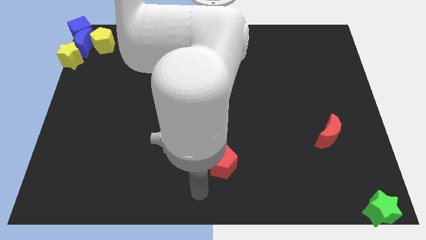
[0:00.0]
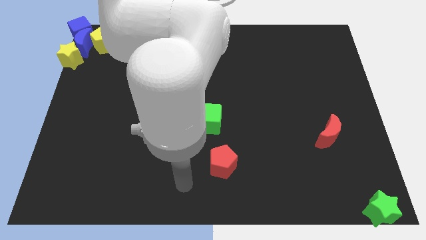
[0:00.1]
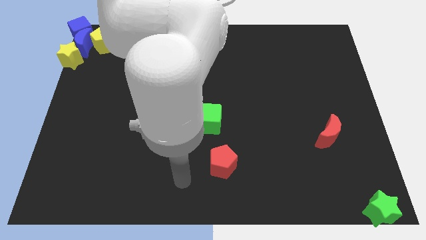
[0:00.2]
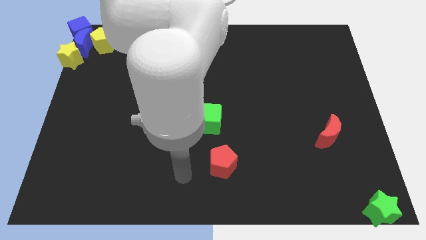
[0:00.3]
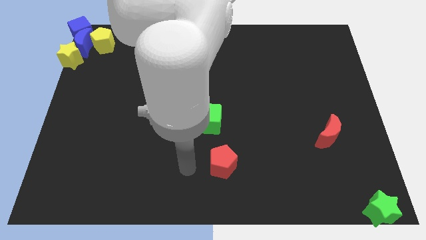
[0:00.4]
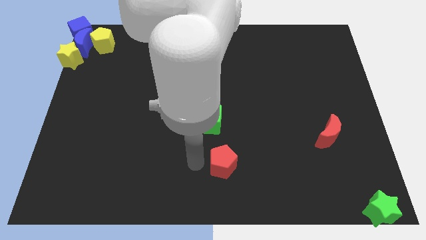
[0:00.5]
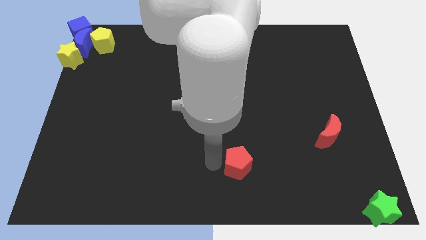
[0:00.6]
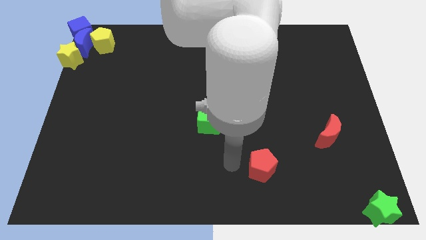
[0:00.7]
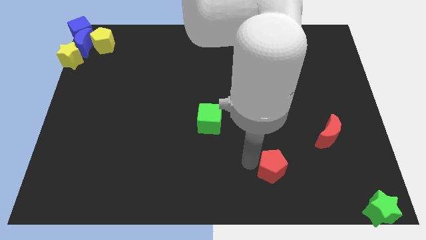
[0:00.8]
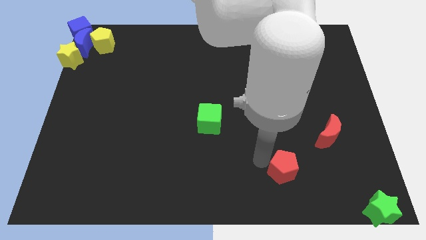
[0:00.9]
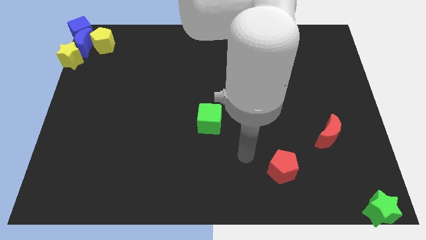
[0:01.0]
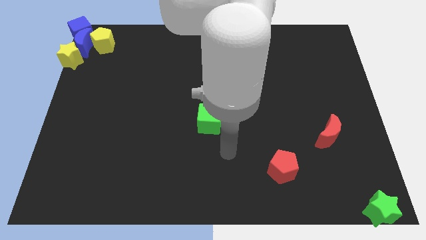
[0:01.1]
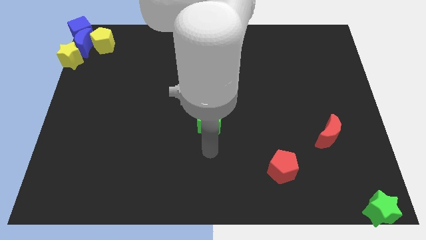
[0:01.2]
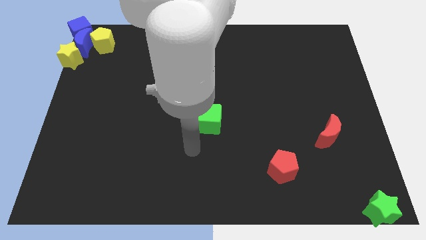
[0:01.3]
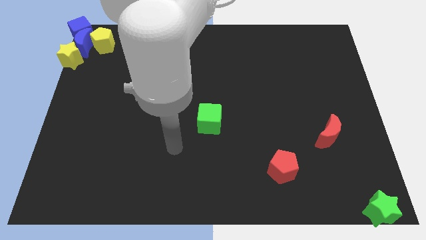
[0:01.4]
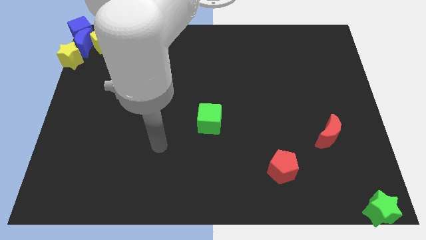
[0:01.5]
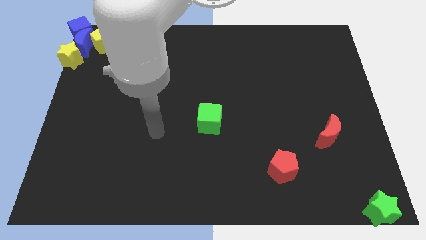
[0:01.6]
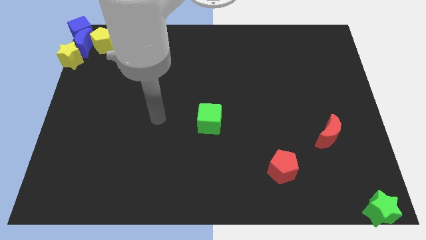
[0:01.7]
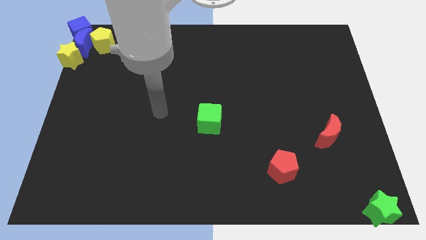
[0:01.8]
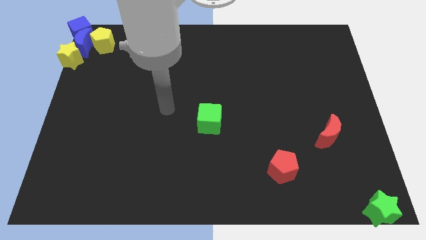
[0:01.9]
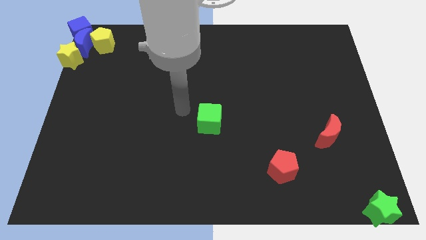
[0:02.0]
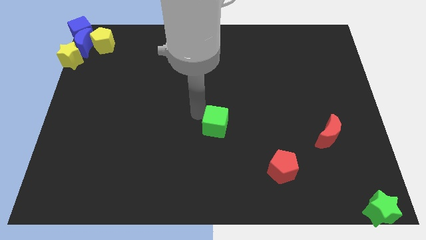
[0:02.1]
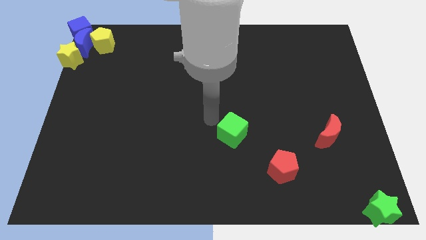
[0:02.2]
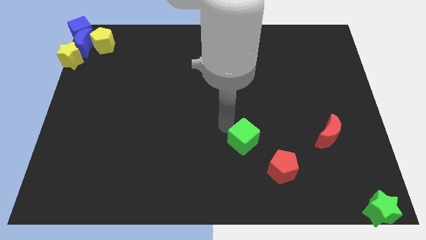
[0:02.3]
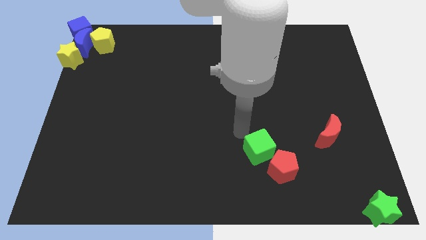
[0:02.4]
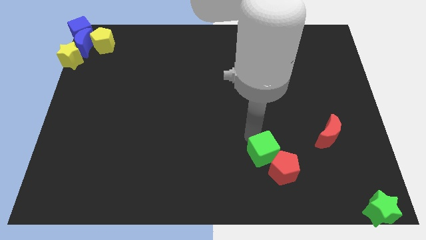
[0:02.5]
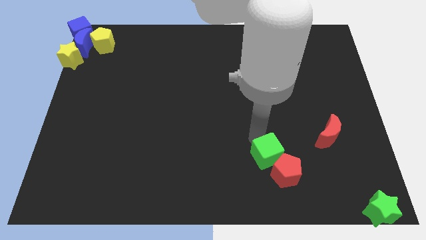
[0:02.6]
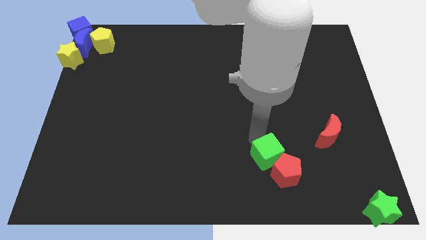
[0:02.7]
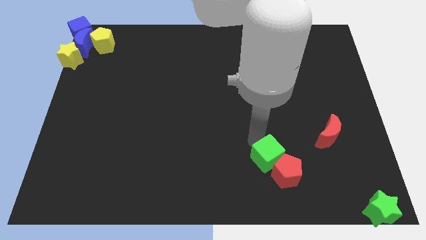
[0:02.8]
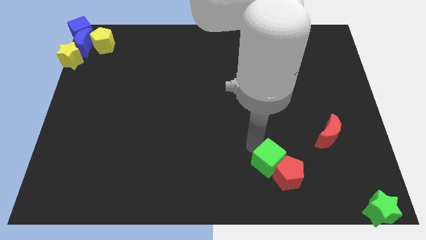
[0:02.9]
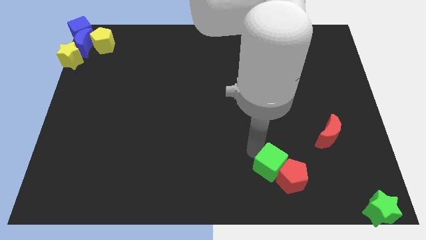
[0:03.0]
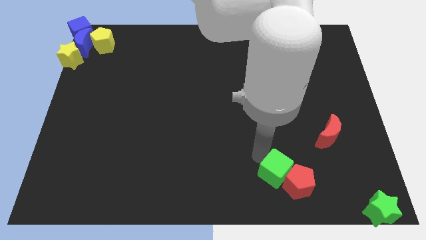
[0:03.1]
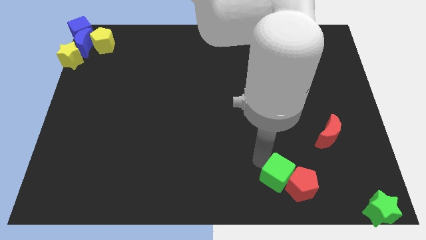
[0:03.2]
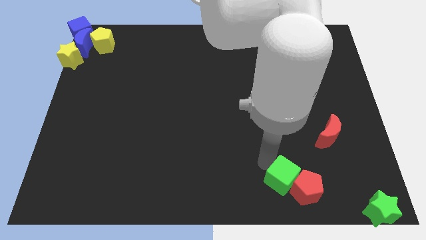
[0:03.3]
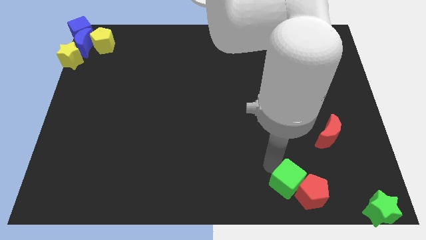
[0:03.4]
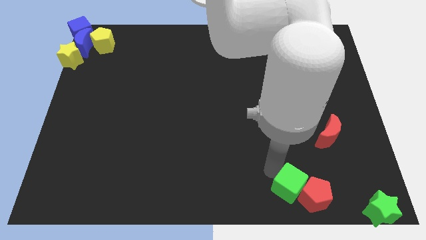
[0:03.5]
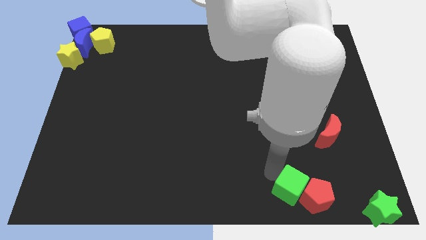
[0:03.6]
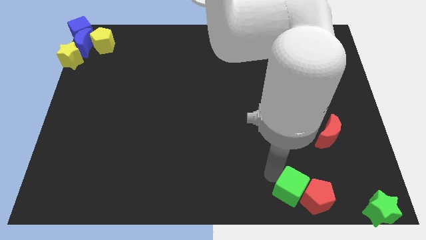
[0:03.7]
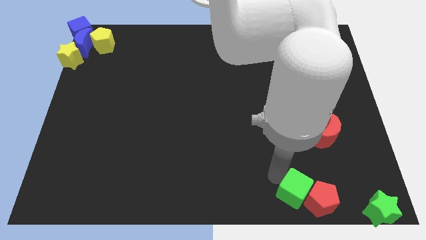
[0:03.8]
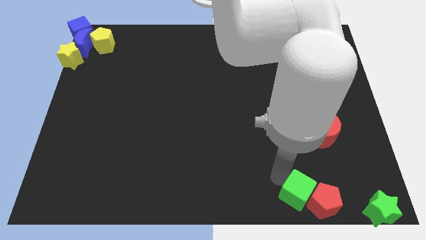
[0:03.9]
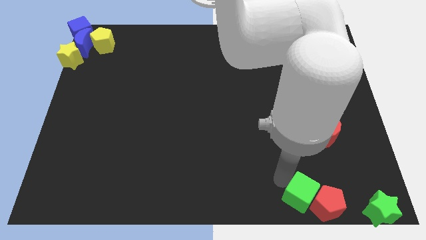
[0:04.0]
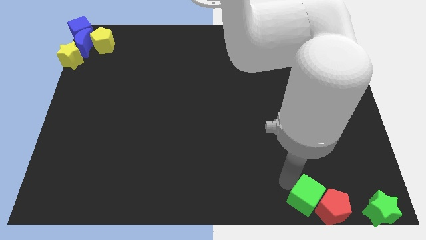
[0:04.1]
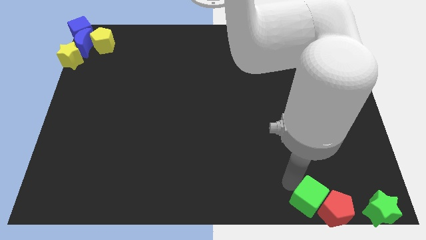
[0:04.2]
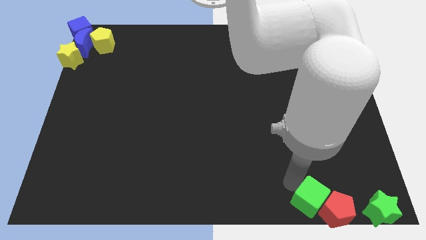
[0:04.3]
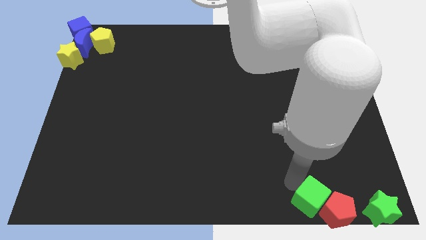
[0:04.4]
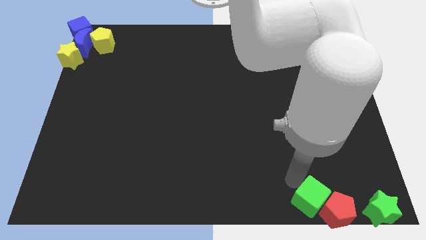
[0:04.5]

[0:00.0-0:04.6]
push the red pentagon and green cube to the bottom right

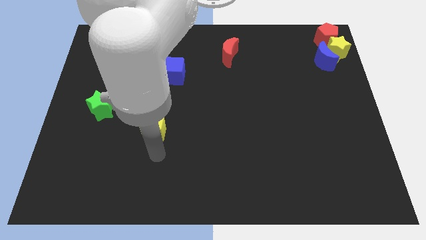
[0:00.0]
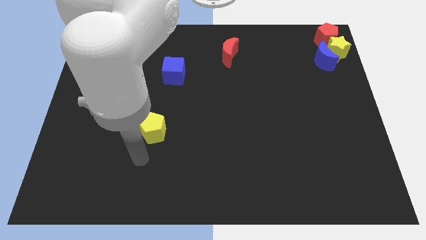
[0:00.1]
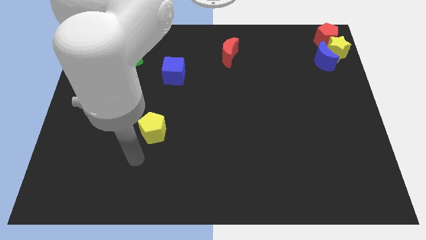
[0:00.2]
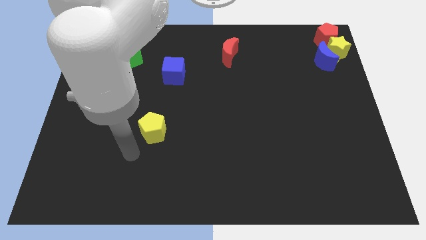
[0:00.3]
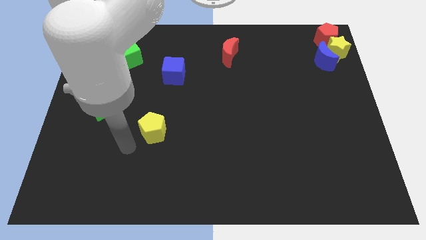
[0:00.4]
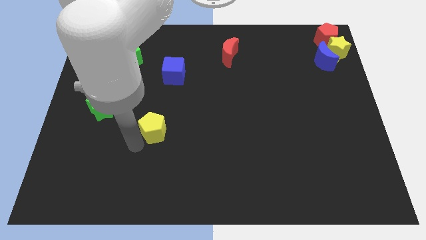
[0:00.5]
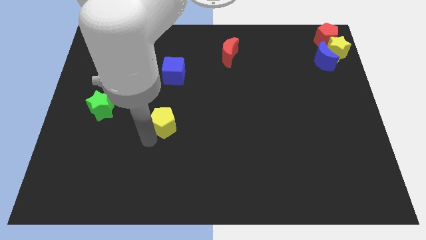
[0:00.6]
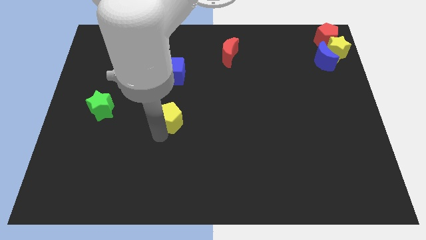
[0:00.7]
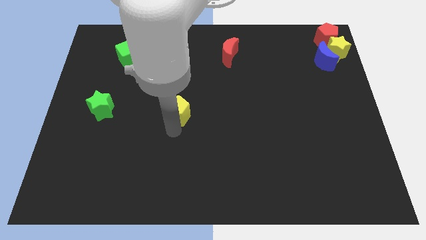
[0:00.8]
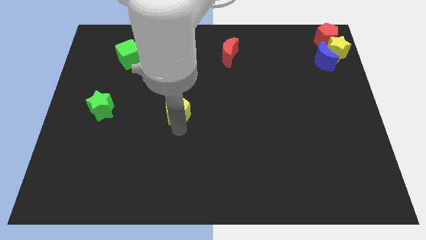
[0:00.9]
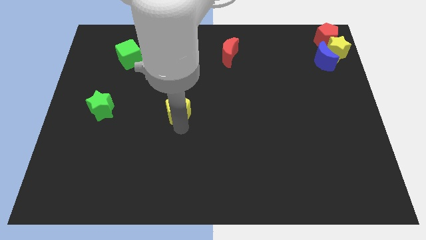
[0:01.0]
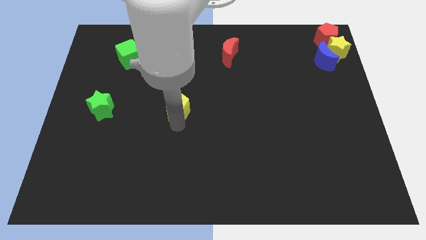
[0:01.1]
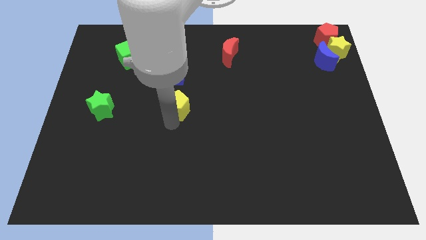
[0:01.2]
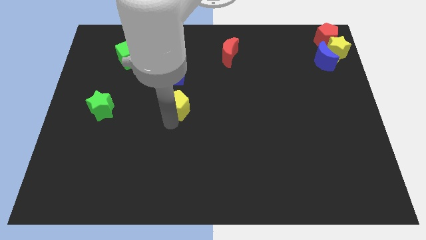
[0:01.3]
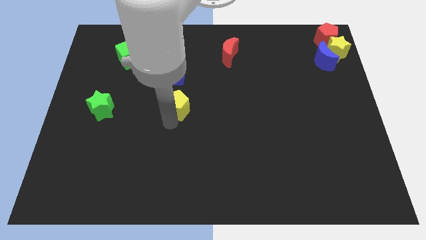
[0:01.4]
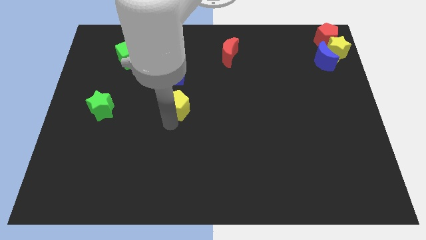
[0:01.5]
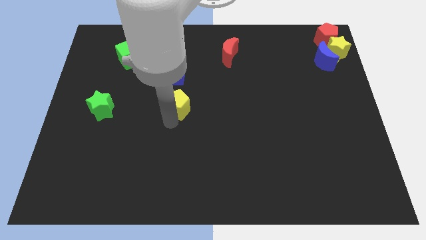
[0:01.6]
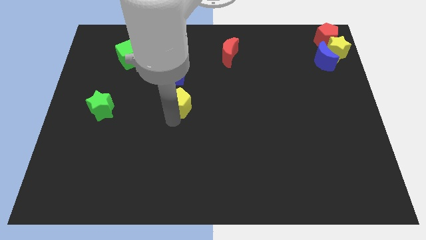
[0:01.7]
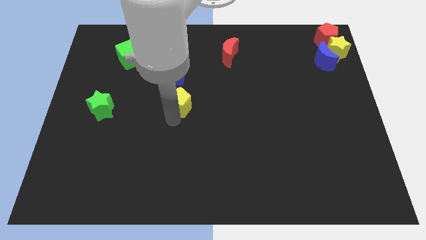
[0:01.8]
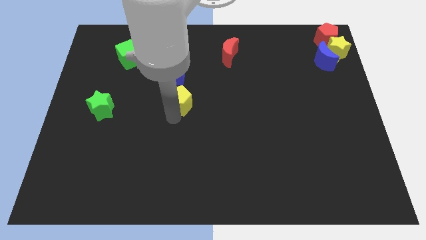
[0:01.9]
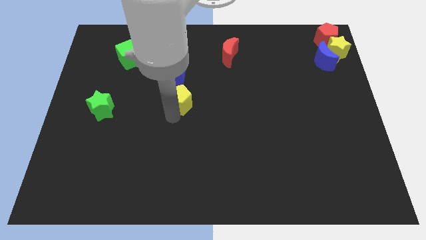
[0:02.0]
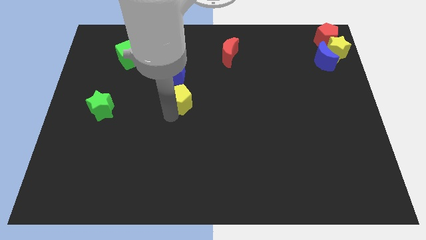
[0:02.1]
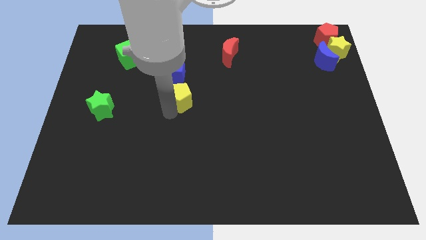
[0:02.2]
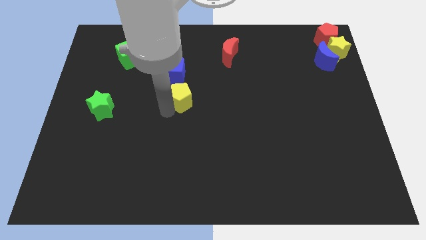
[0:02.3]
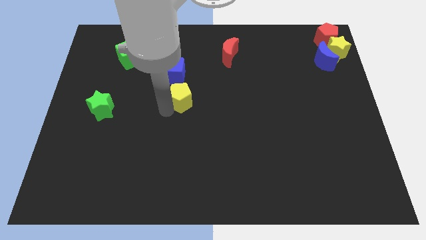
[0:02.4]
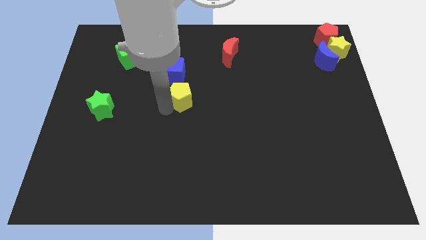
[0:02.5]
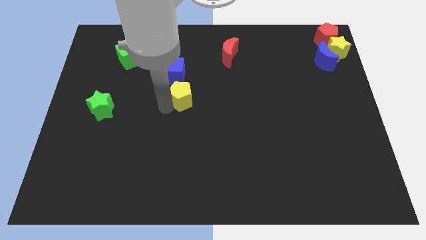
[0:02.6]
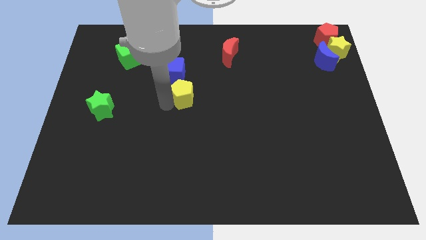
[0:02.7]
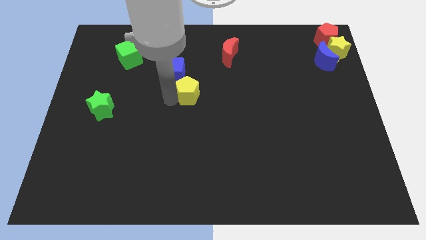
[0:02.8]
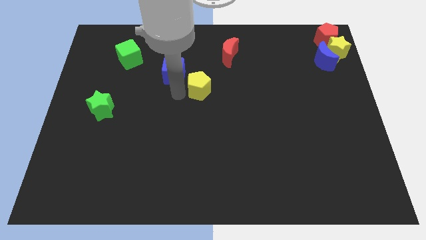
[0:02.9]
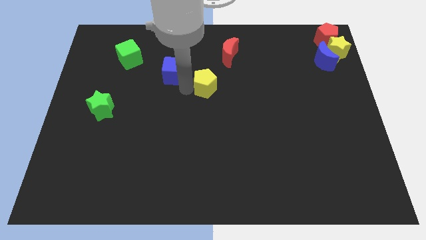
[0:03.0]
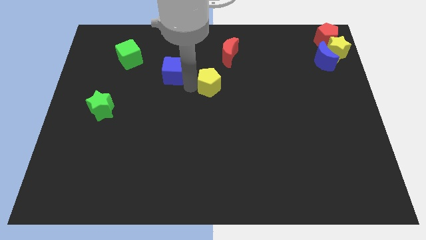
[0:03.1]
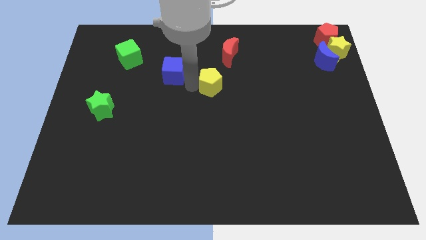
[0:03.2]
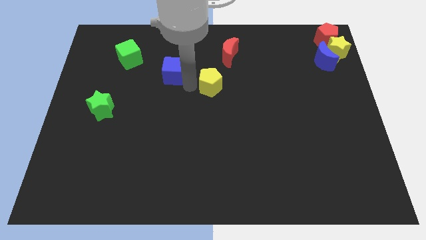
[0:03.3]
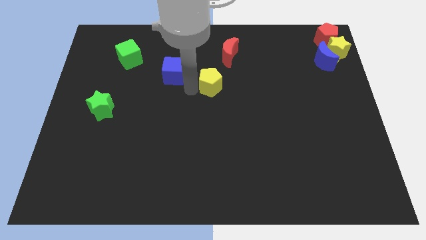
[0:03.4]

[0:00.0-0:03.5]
push the yellow pentagon towards the bottom right side of the blue cube

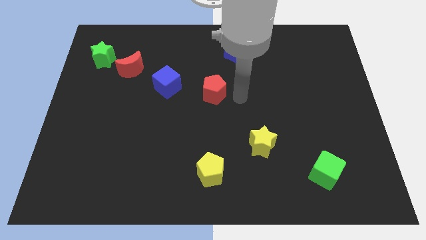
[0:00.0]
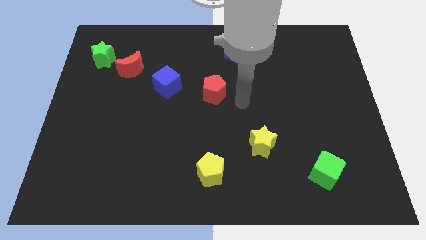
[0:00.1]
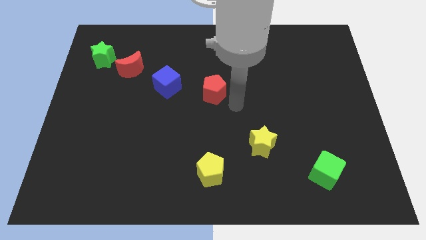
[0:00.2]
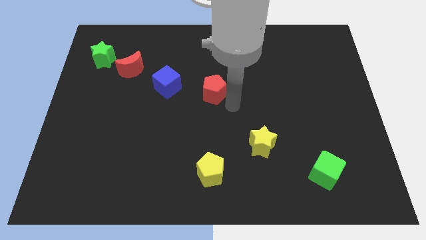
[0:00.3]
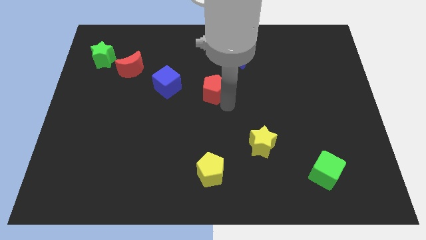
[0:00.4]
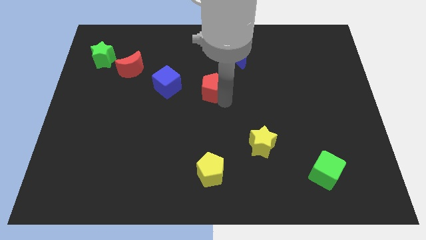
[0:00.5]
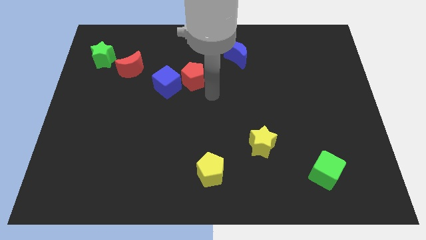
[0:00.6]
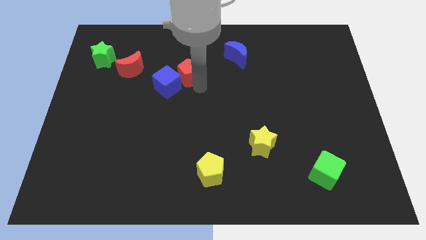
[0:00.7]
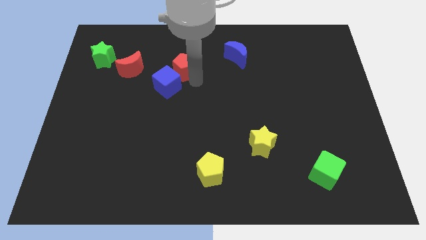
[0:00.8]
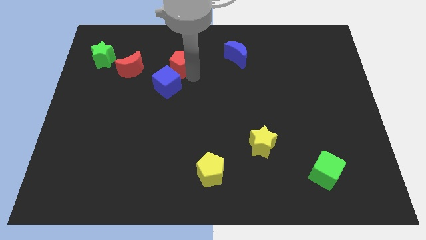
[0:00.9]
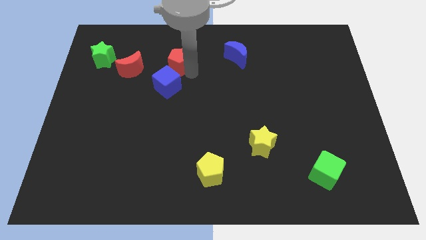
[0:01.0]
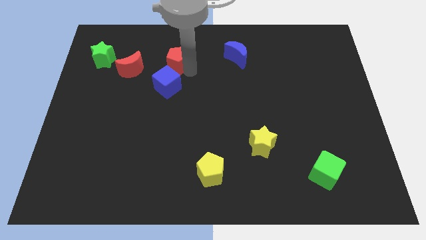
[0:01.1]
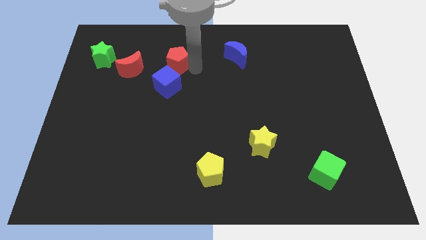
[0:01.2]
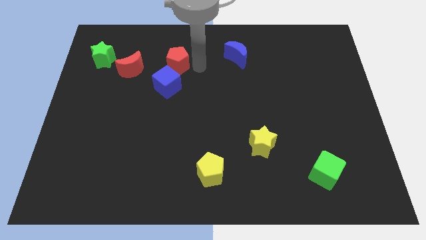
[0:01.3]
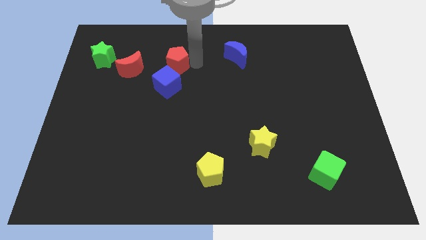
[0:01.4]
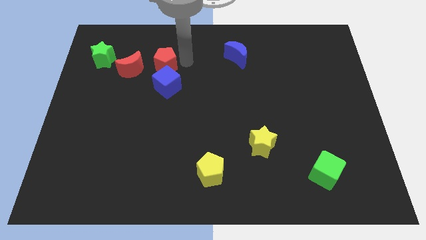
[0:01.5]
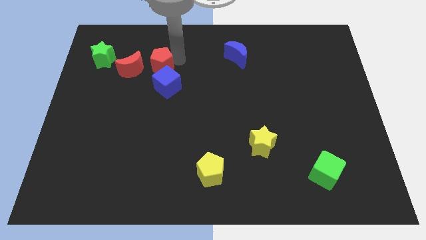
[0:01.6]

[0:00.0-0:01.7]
move the red pentagon above the blue cube
